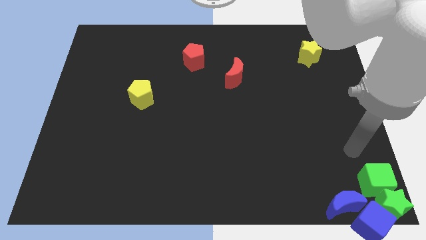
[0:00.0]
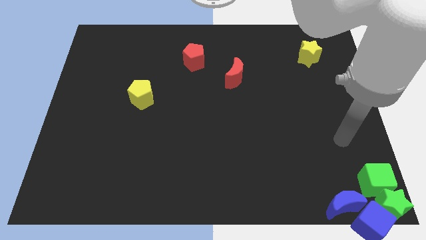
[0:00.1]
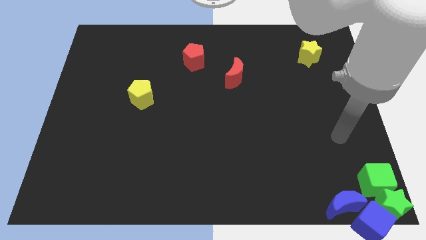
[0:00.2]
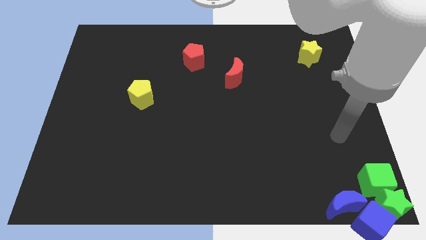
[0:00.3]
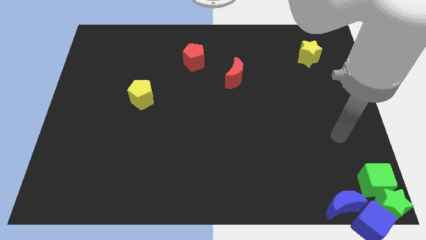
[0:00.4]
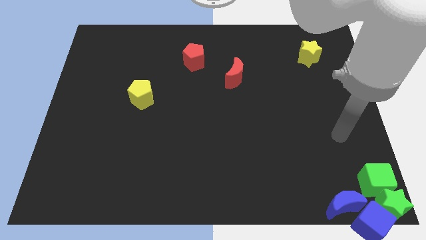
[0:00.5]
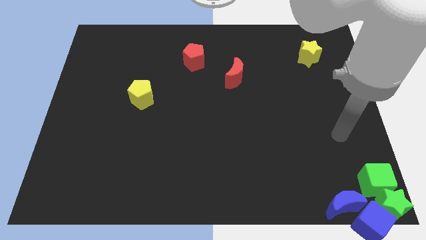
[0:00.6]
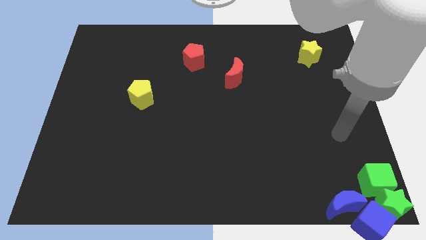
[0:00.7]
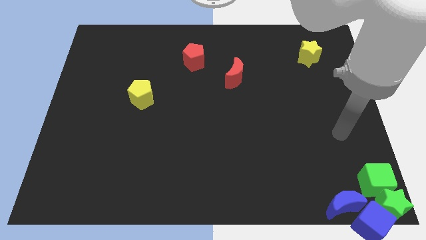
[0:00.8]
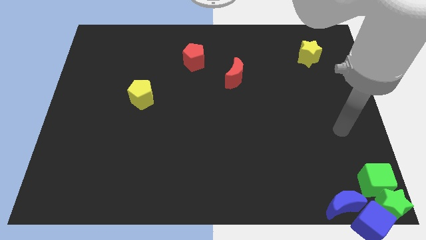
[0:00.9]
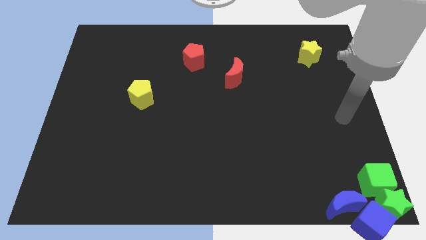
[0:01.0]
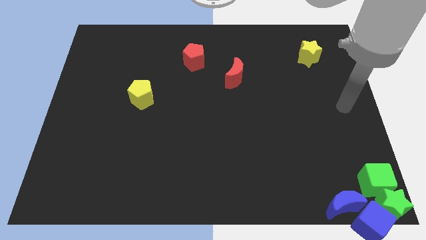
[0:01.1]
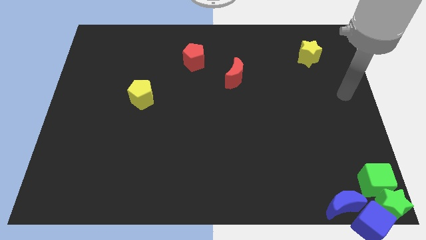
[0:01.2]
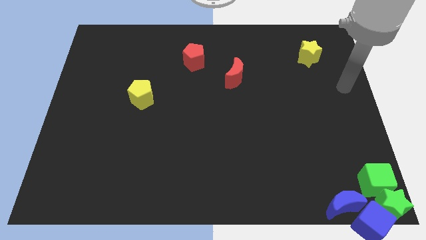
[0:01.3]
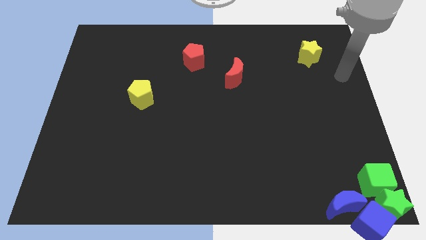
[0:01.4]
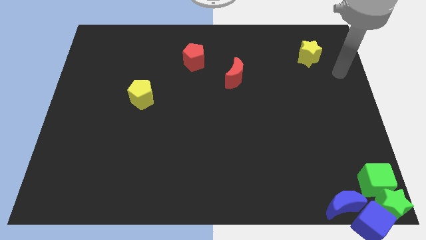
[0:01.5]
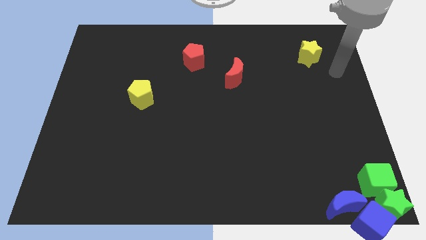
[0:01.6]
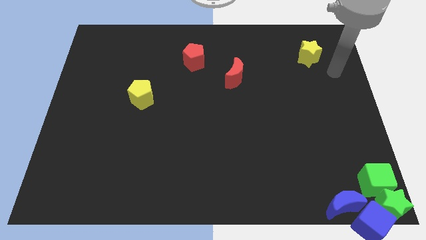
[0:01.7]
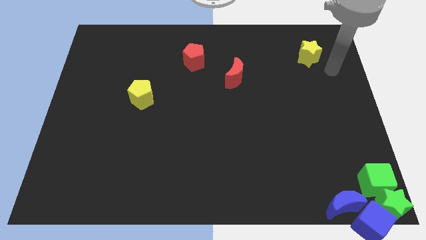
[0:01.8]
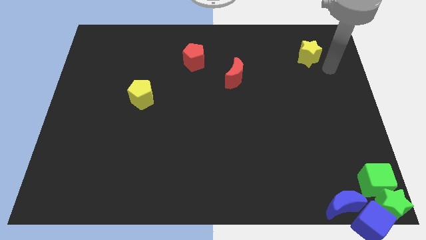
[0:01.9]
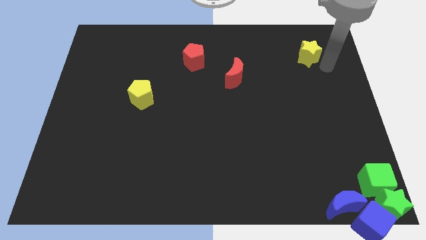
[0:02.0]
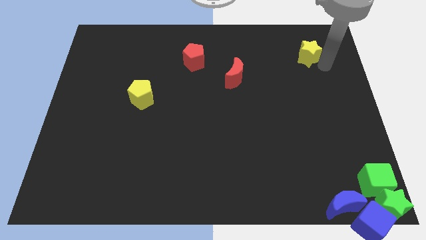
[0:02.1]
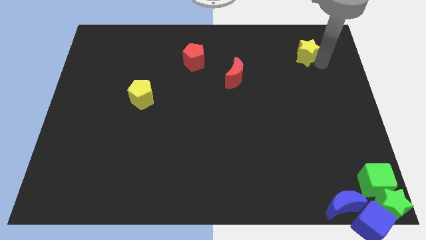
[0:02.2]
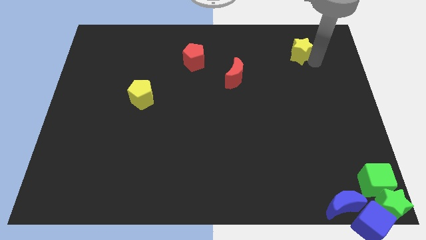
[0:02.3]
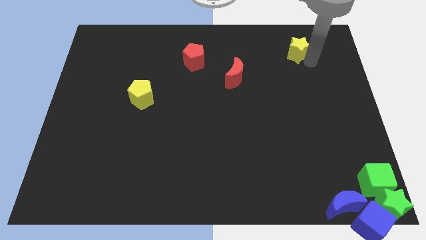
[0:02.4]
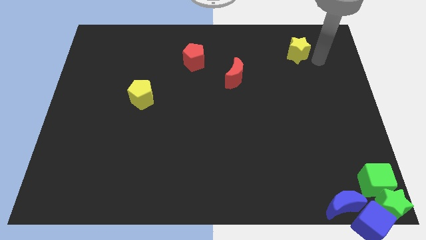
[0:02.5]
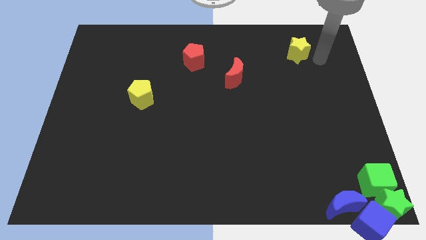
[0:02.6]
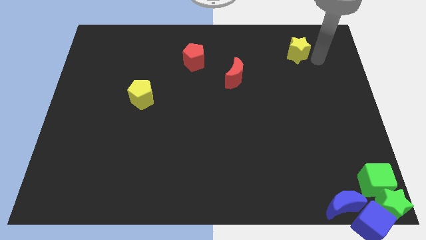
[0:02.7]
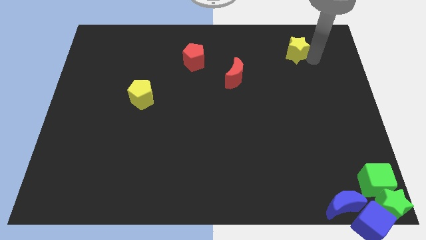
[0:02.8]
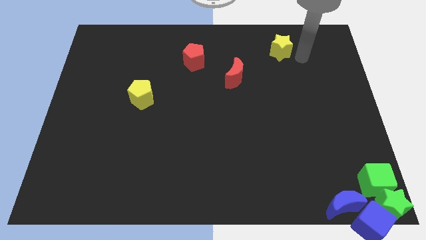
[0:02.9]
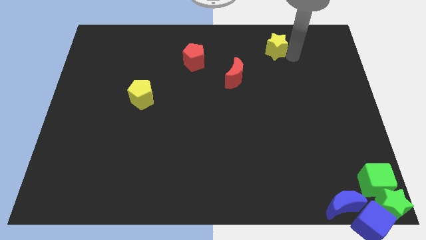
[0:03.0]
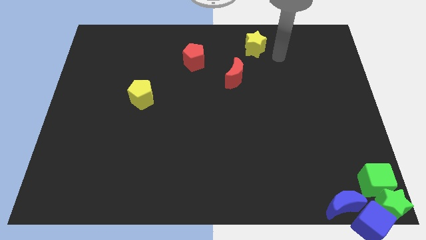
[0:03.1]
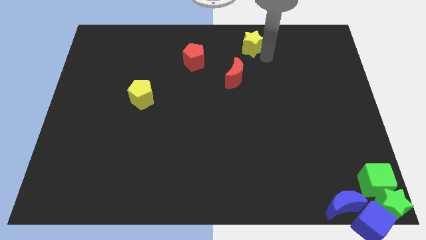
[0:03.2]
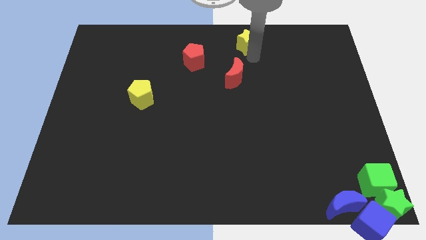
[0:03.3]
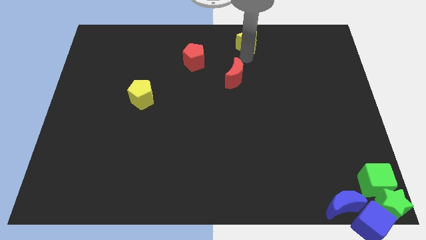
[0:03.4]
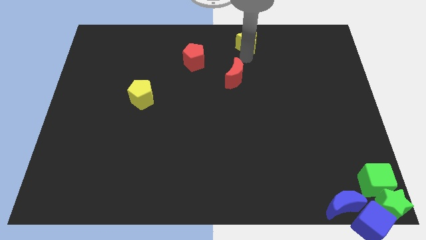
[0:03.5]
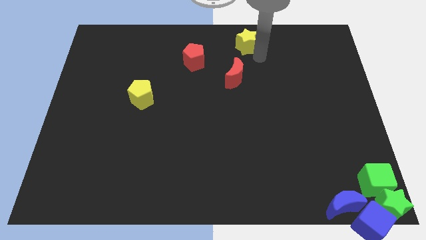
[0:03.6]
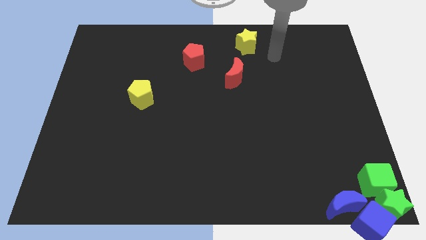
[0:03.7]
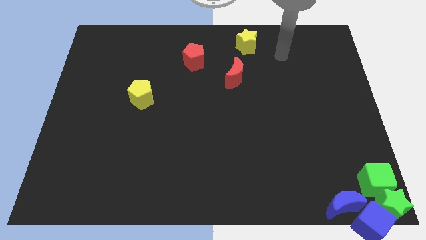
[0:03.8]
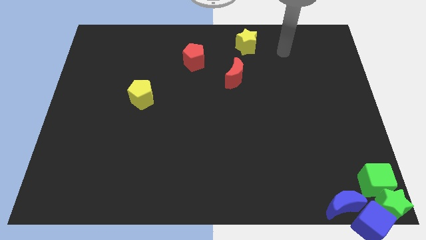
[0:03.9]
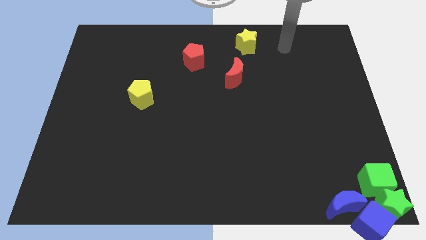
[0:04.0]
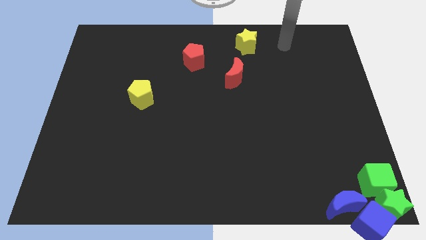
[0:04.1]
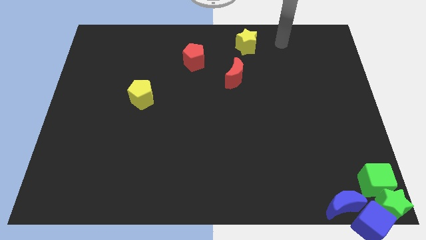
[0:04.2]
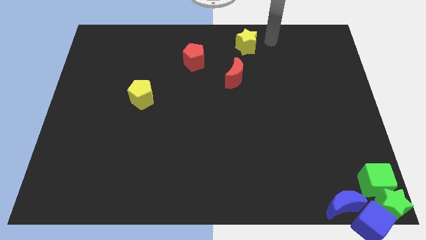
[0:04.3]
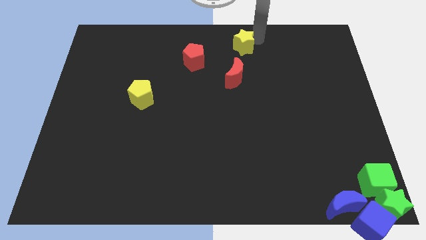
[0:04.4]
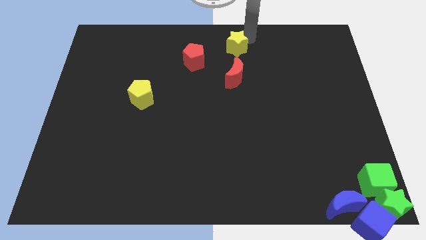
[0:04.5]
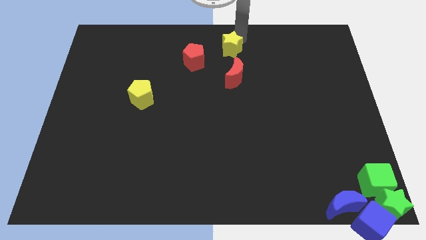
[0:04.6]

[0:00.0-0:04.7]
push the yellow star to the top side of the red crescent

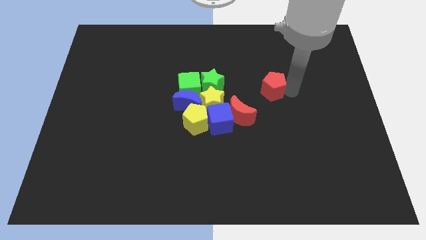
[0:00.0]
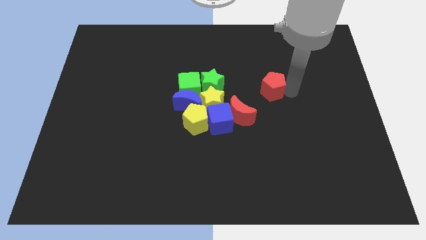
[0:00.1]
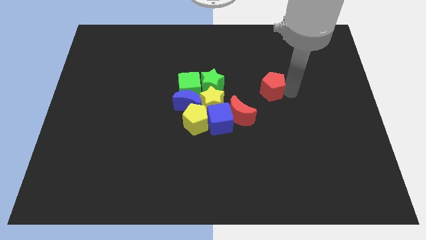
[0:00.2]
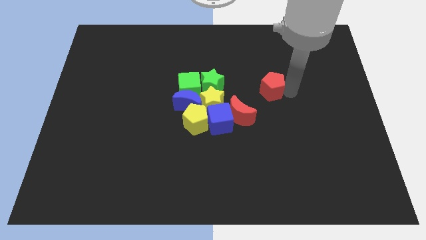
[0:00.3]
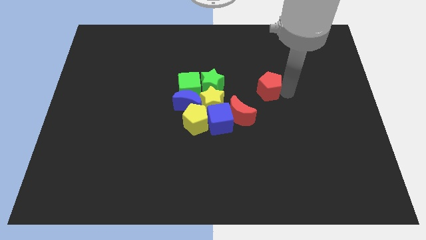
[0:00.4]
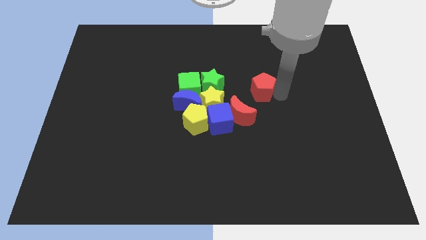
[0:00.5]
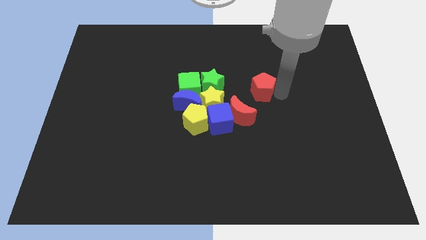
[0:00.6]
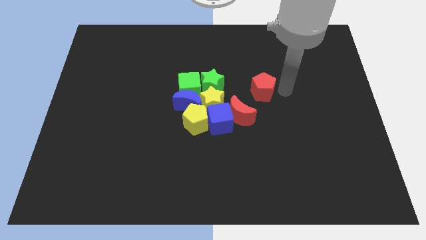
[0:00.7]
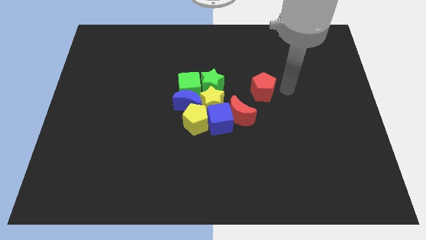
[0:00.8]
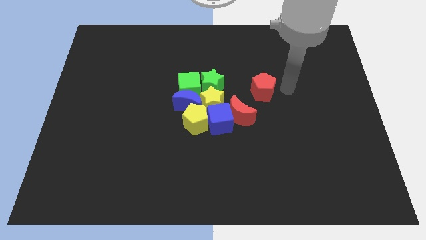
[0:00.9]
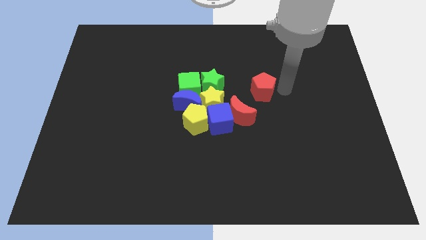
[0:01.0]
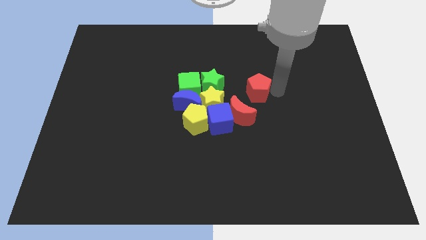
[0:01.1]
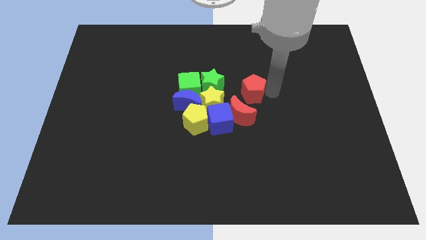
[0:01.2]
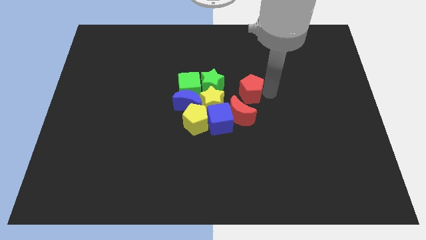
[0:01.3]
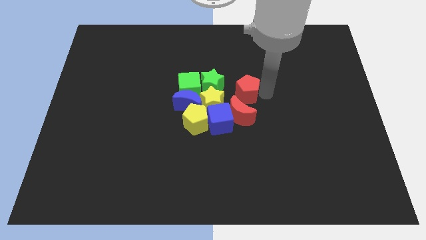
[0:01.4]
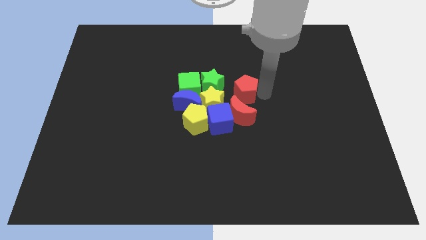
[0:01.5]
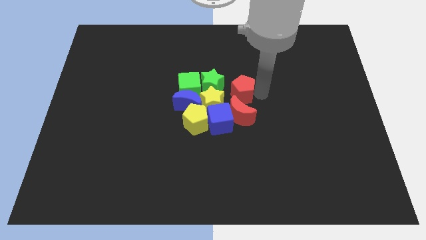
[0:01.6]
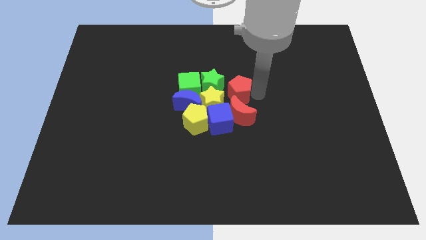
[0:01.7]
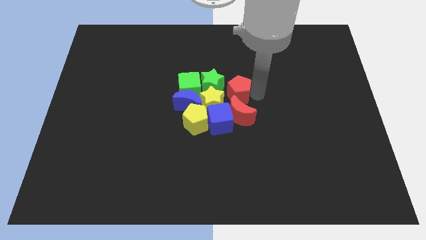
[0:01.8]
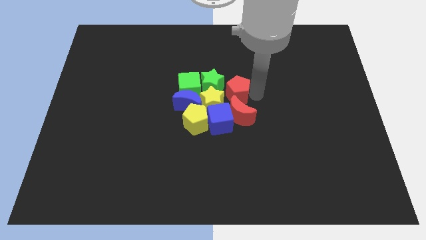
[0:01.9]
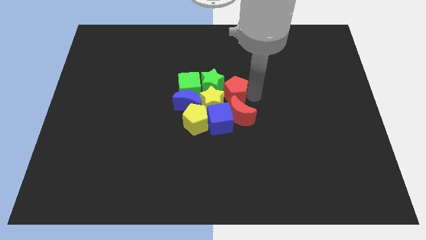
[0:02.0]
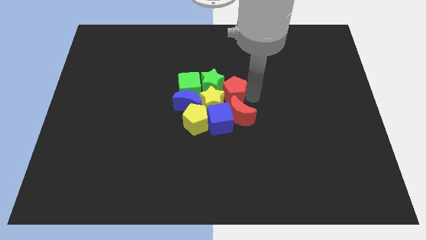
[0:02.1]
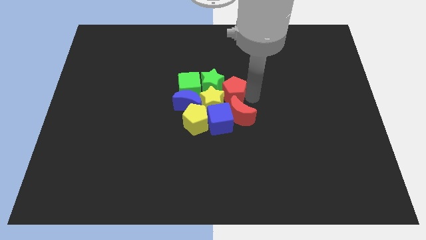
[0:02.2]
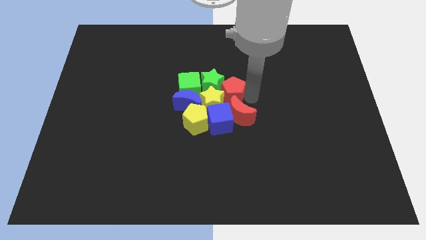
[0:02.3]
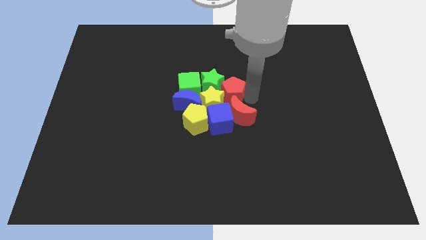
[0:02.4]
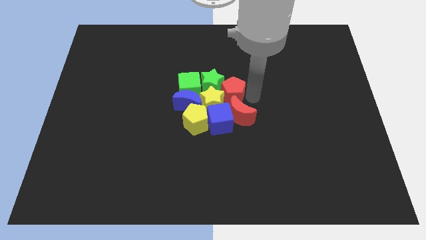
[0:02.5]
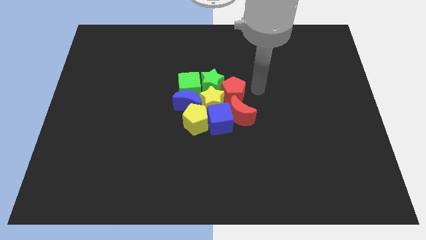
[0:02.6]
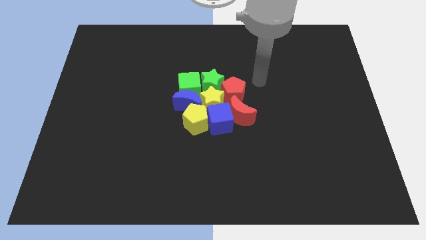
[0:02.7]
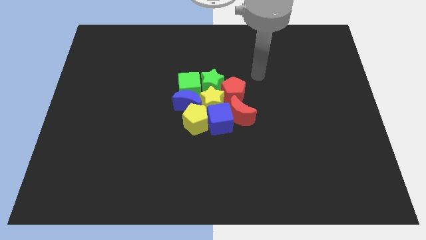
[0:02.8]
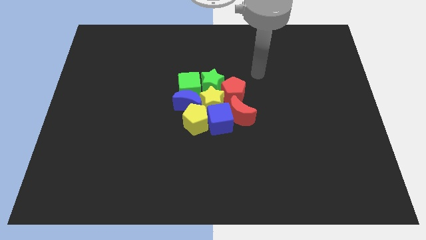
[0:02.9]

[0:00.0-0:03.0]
push the red pentagon into the group of blocks

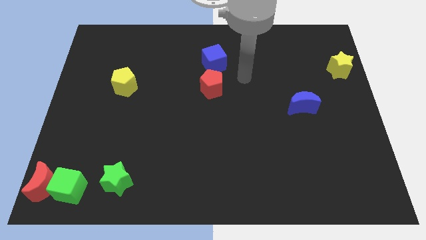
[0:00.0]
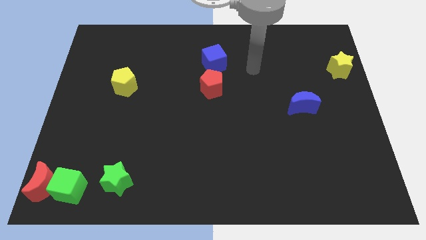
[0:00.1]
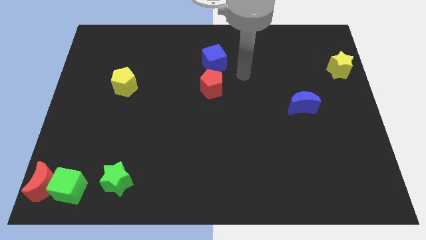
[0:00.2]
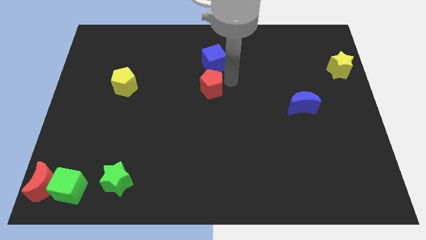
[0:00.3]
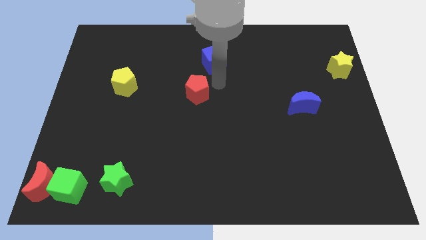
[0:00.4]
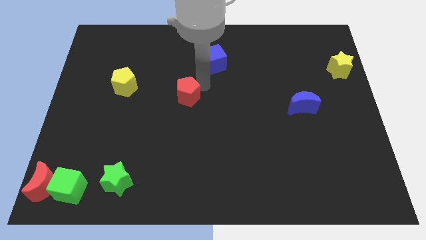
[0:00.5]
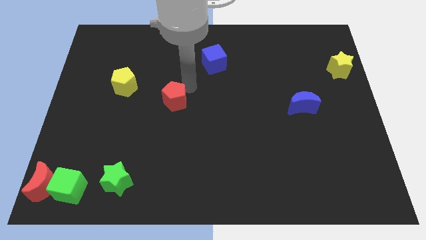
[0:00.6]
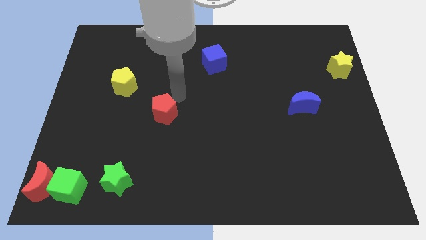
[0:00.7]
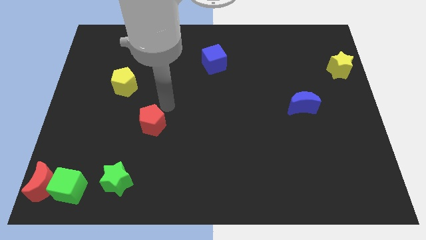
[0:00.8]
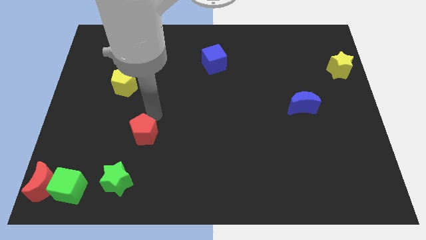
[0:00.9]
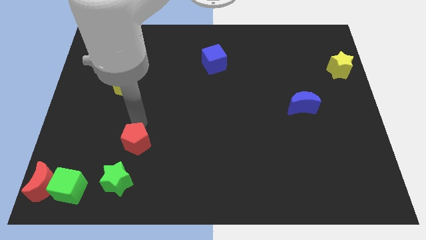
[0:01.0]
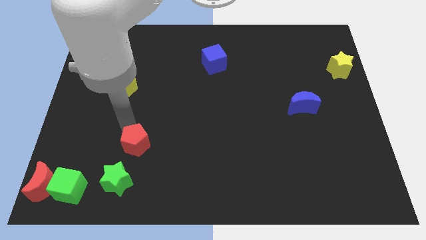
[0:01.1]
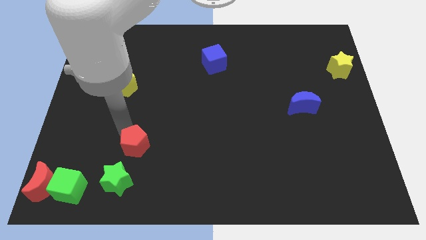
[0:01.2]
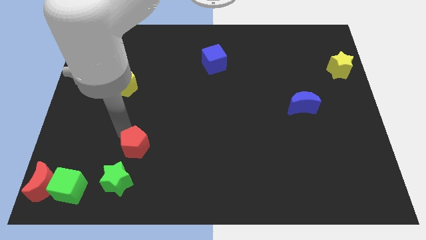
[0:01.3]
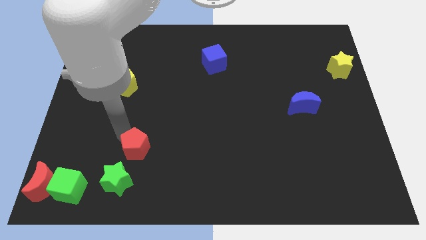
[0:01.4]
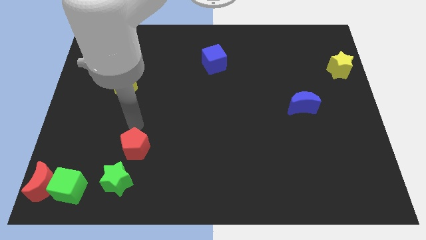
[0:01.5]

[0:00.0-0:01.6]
push the red pentagon to the top of the green star
